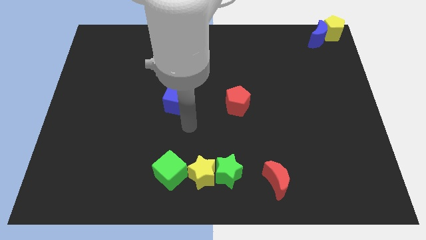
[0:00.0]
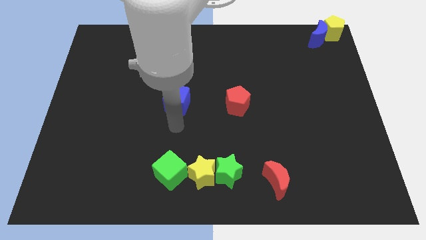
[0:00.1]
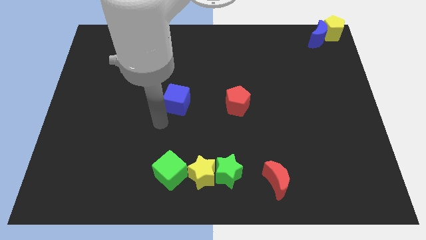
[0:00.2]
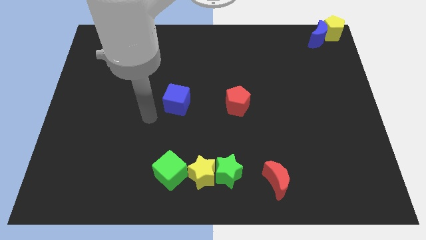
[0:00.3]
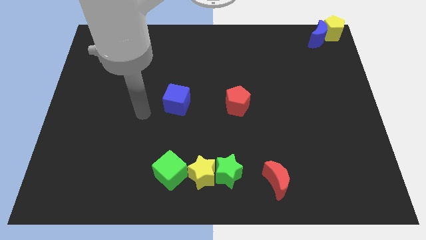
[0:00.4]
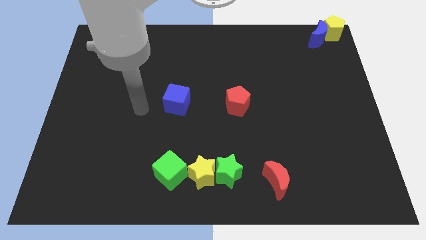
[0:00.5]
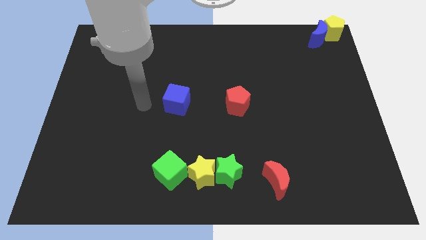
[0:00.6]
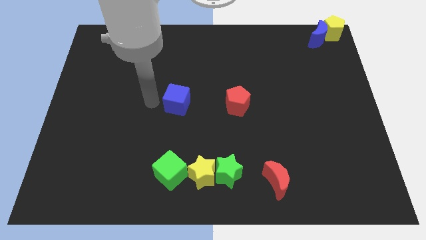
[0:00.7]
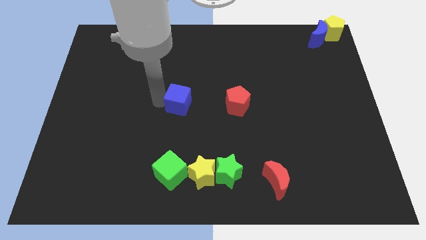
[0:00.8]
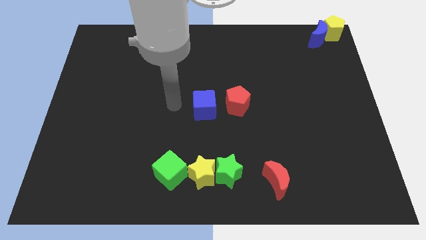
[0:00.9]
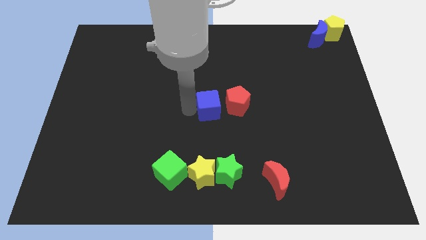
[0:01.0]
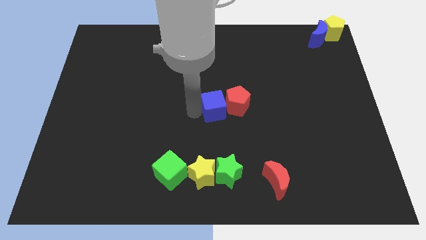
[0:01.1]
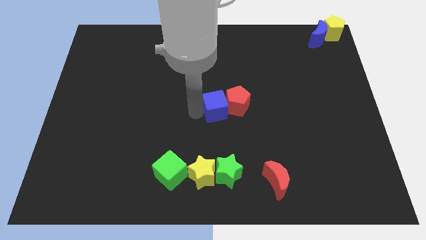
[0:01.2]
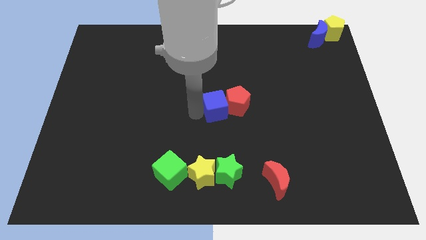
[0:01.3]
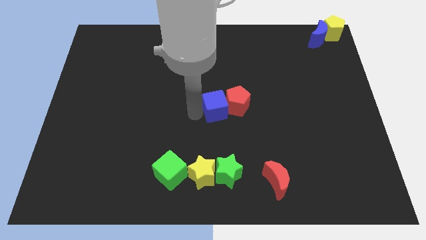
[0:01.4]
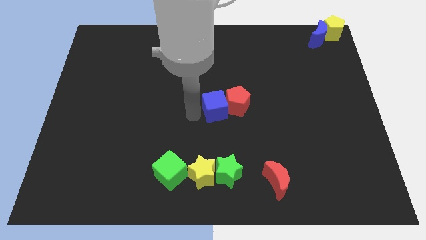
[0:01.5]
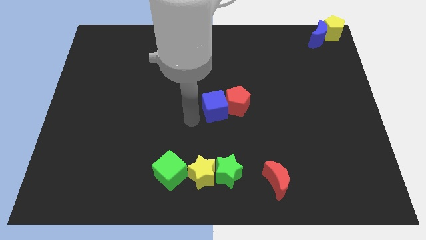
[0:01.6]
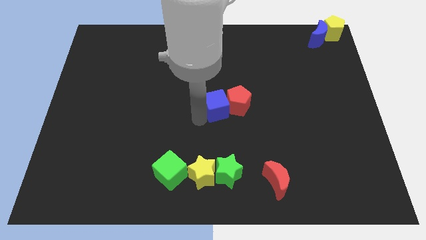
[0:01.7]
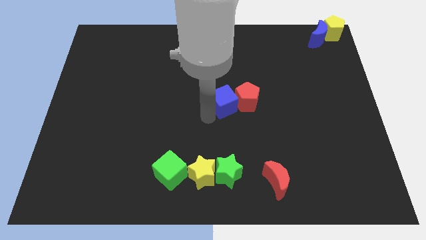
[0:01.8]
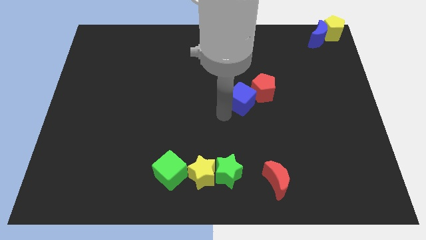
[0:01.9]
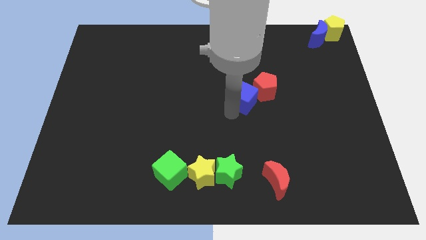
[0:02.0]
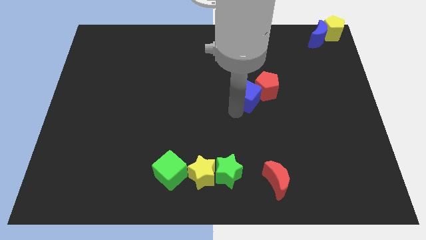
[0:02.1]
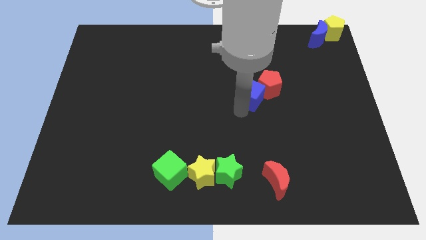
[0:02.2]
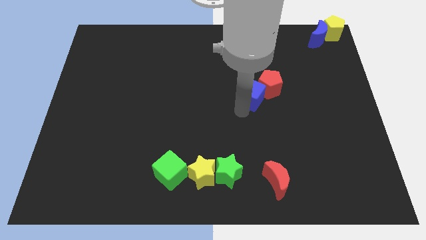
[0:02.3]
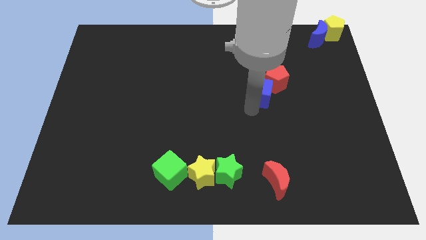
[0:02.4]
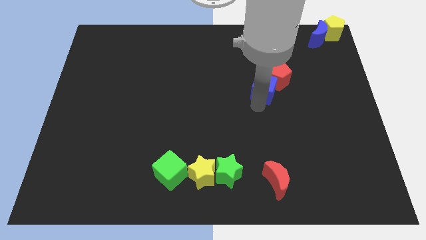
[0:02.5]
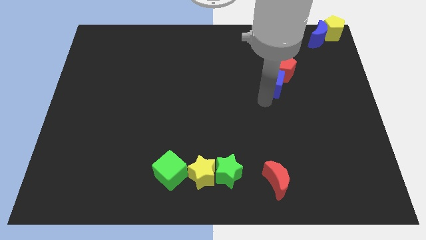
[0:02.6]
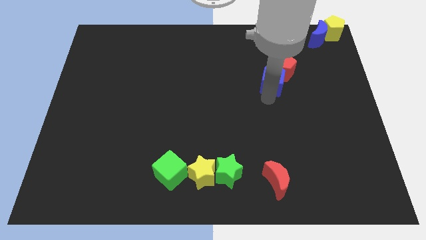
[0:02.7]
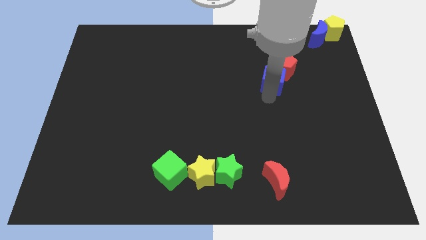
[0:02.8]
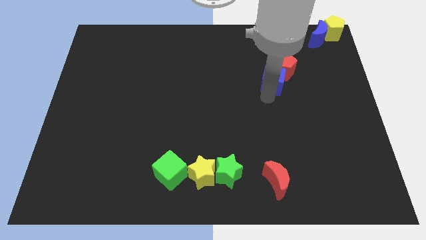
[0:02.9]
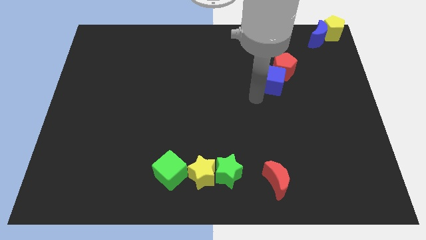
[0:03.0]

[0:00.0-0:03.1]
push the blue cube into the red pentagon

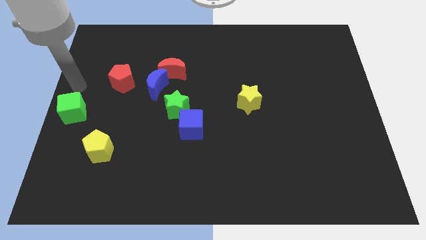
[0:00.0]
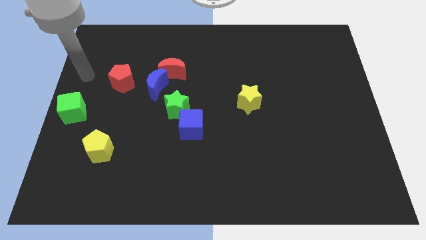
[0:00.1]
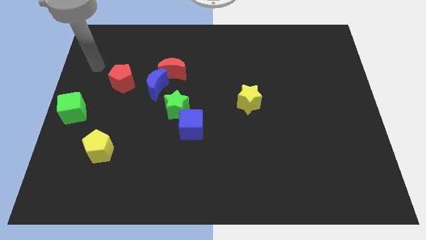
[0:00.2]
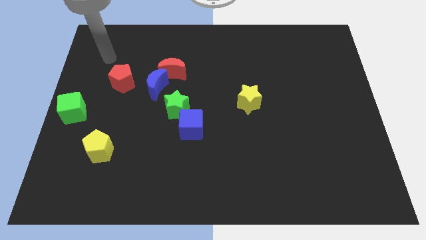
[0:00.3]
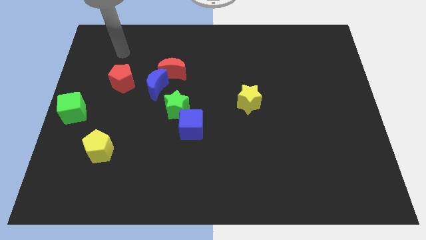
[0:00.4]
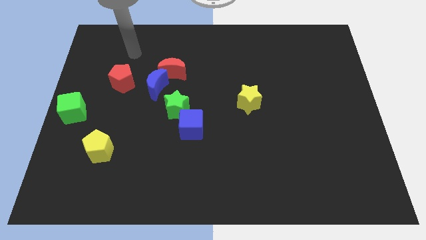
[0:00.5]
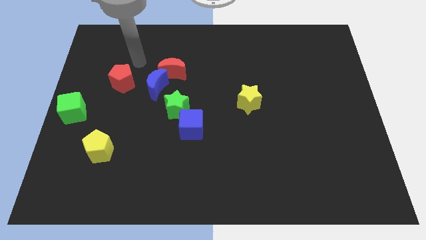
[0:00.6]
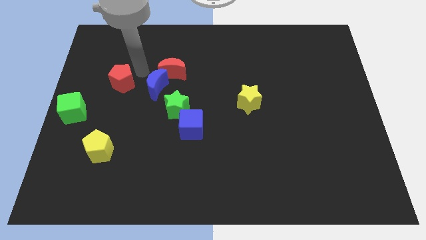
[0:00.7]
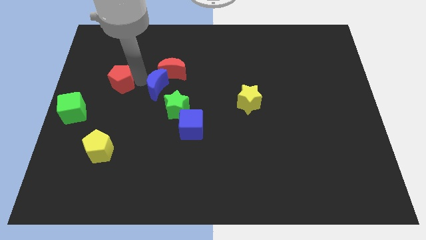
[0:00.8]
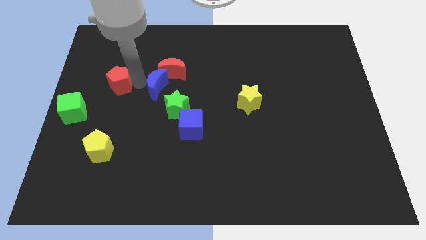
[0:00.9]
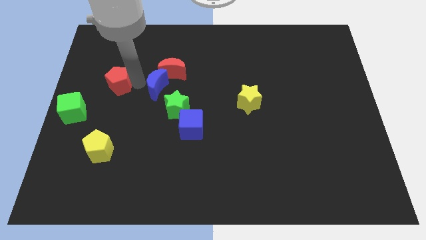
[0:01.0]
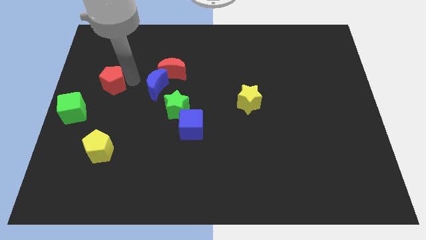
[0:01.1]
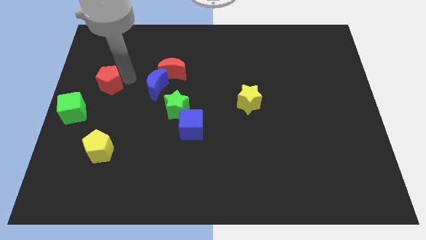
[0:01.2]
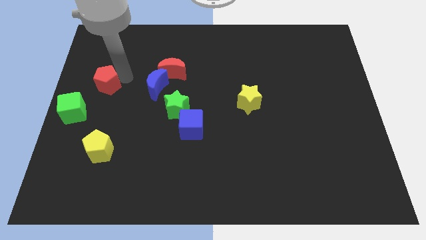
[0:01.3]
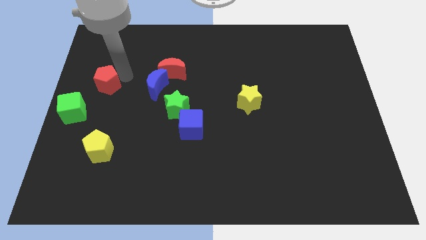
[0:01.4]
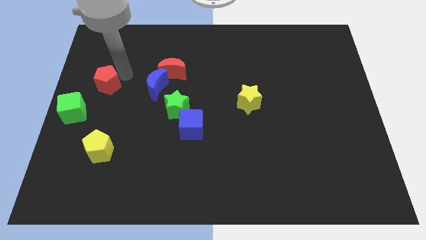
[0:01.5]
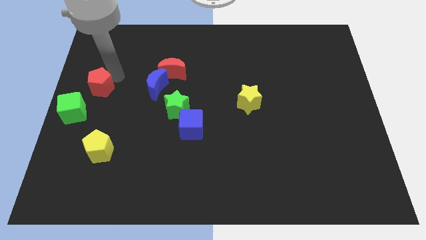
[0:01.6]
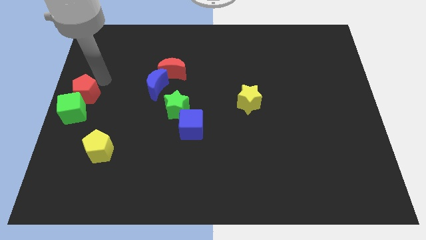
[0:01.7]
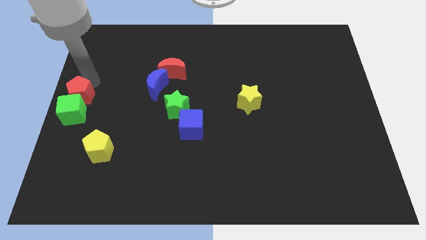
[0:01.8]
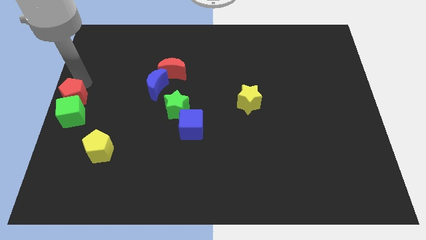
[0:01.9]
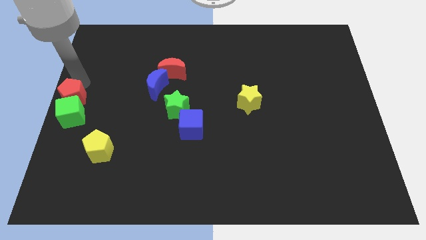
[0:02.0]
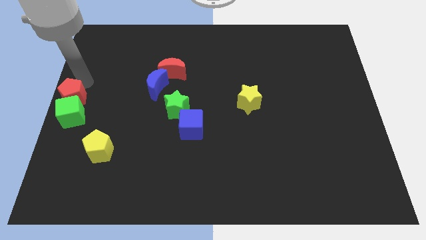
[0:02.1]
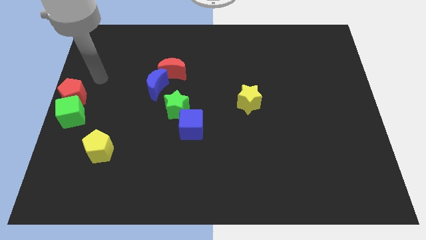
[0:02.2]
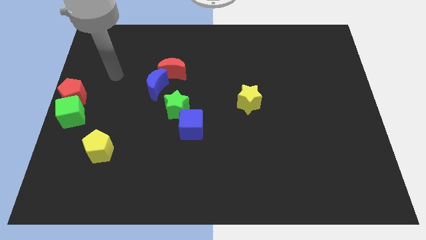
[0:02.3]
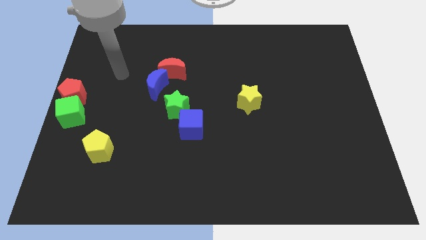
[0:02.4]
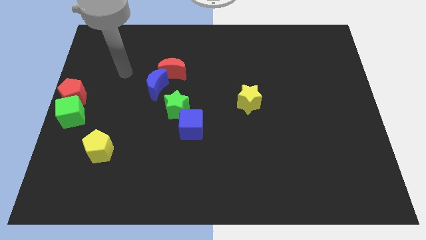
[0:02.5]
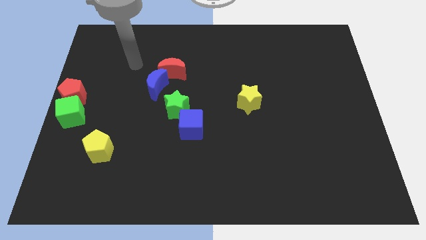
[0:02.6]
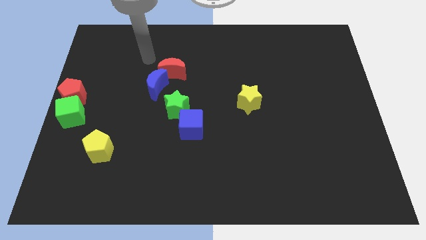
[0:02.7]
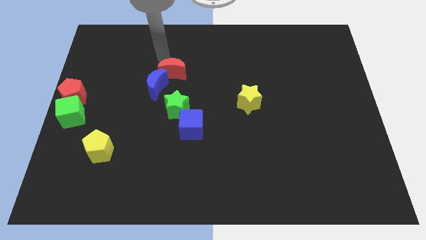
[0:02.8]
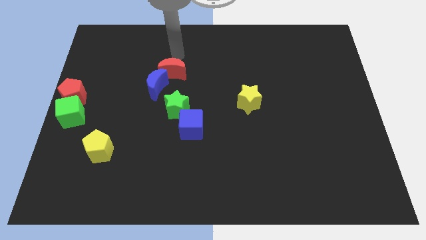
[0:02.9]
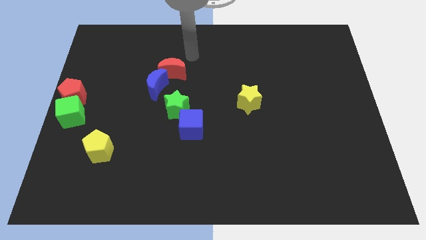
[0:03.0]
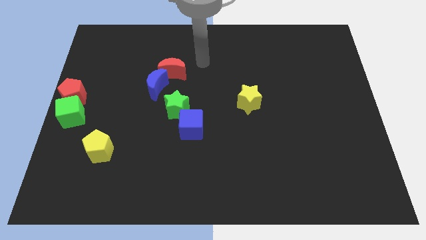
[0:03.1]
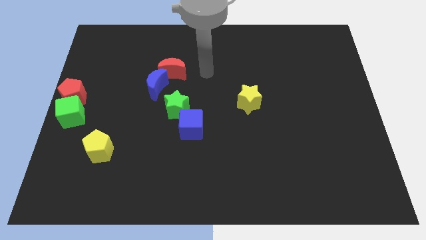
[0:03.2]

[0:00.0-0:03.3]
move the red pentagon to the top side of the green cube

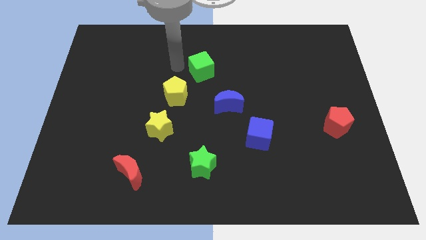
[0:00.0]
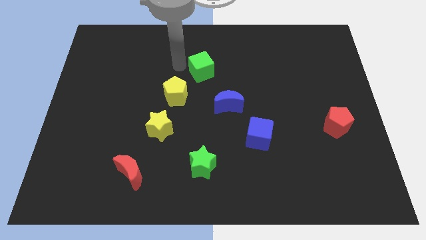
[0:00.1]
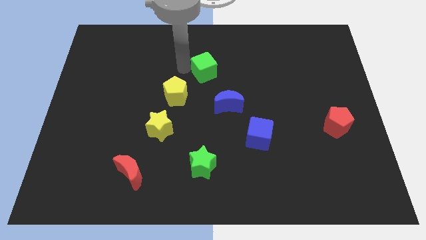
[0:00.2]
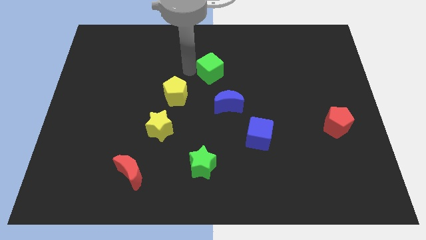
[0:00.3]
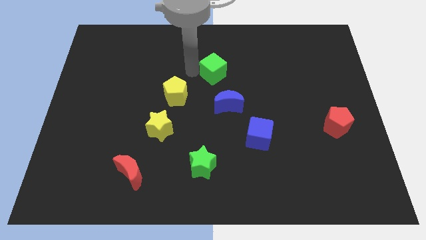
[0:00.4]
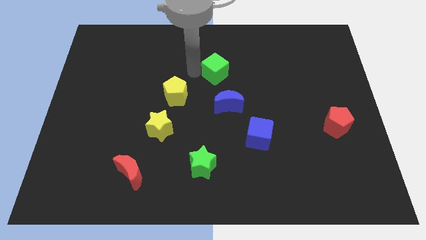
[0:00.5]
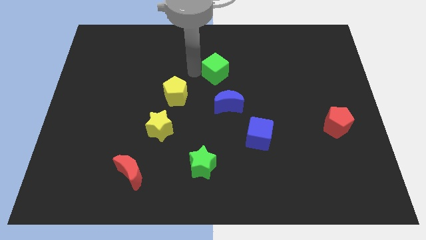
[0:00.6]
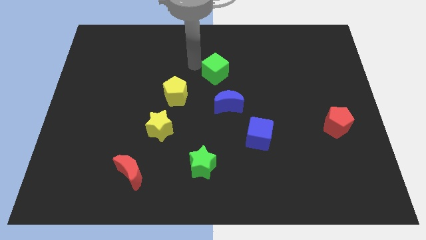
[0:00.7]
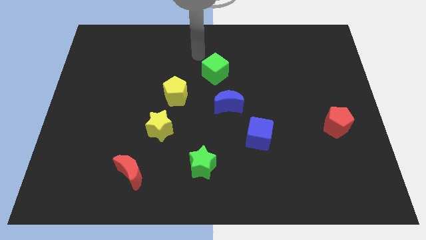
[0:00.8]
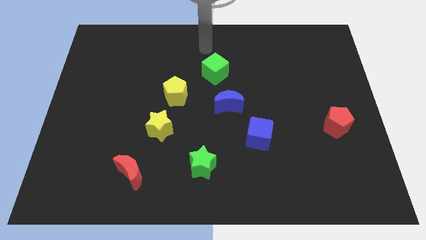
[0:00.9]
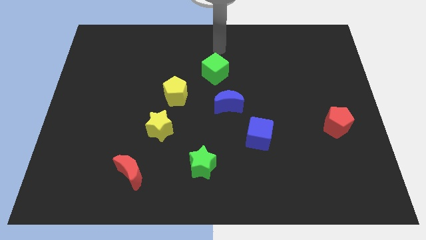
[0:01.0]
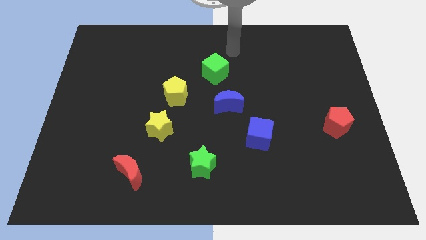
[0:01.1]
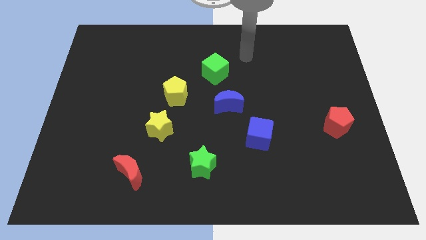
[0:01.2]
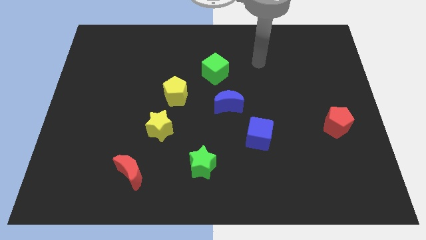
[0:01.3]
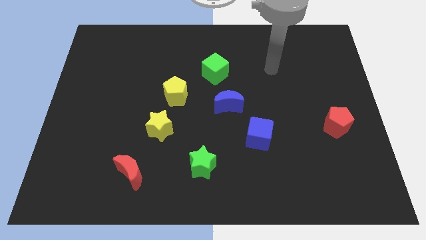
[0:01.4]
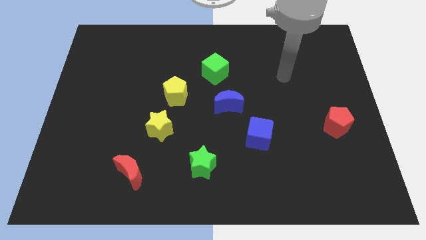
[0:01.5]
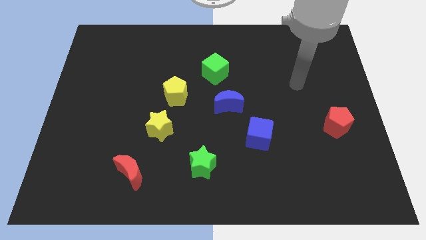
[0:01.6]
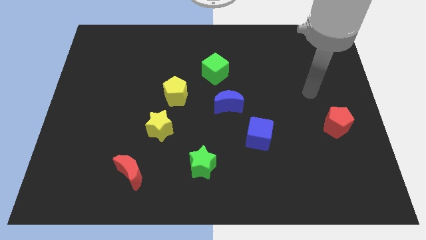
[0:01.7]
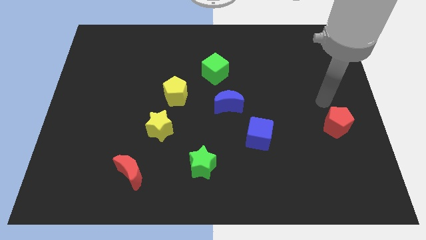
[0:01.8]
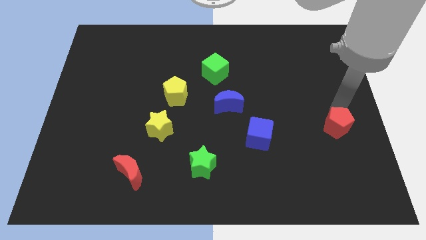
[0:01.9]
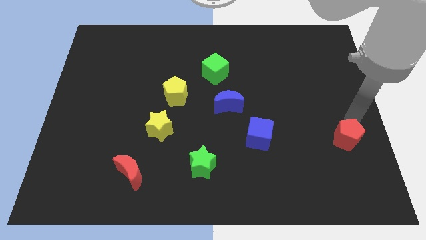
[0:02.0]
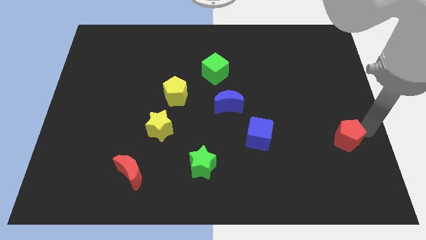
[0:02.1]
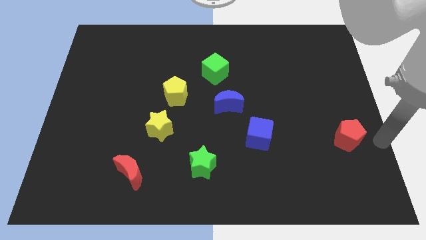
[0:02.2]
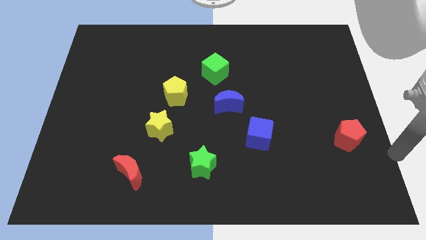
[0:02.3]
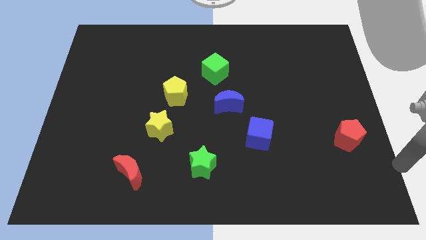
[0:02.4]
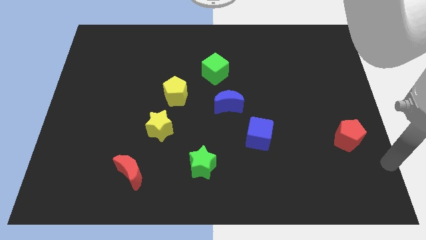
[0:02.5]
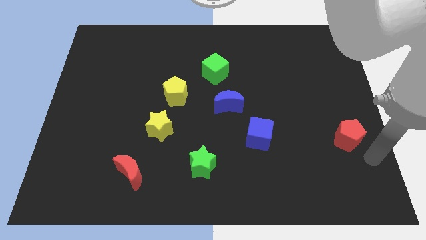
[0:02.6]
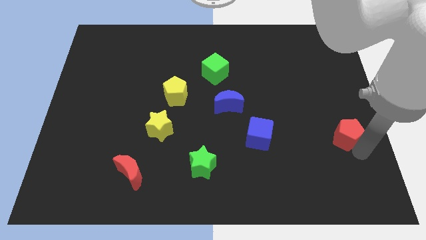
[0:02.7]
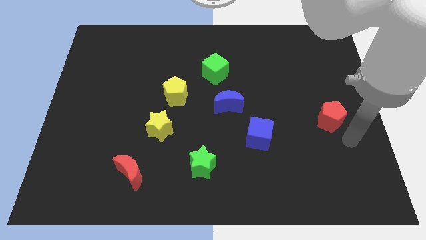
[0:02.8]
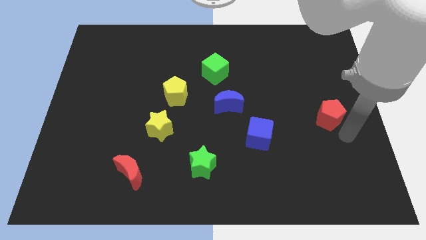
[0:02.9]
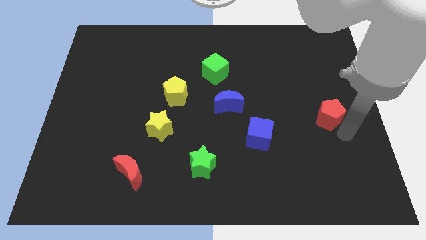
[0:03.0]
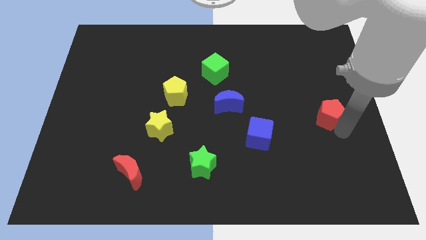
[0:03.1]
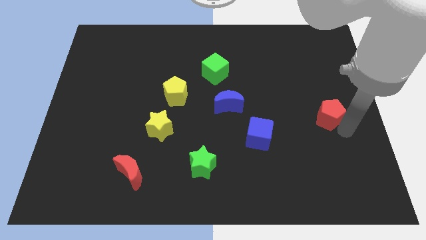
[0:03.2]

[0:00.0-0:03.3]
slightly push the red pentagon to the top right side of the blue cube
